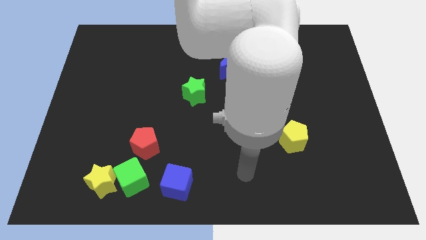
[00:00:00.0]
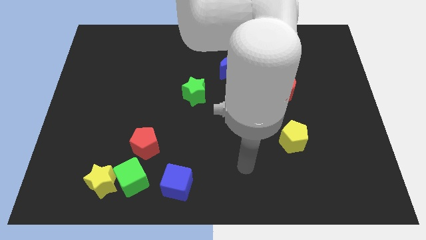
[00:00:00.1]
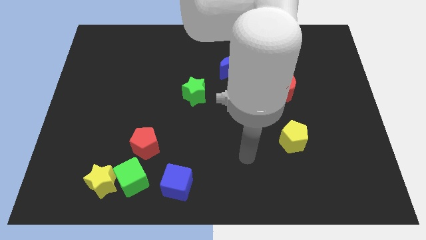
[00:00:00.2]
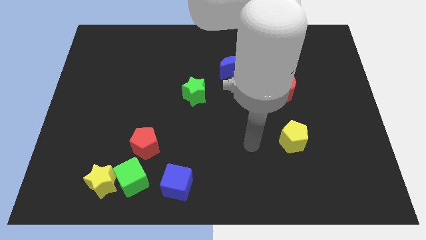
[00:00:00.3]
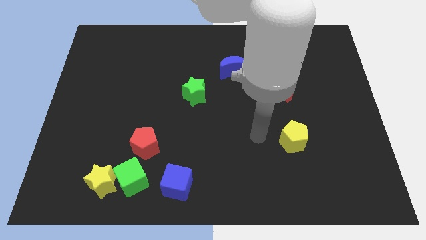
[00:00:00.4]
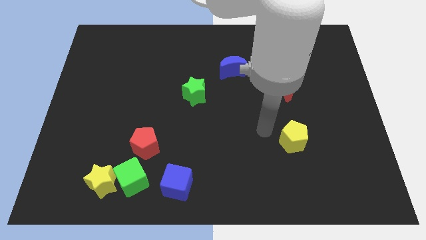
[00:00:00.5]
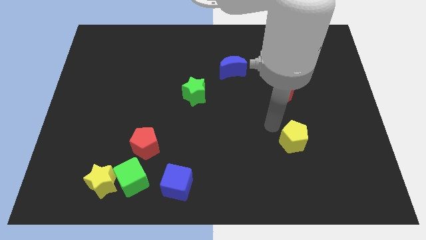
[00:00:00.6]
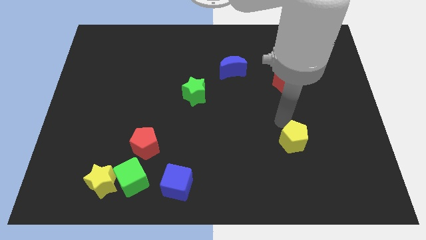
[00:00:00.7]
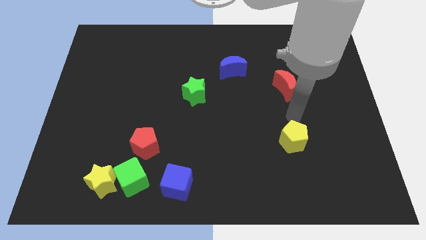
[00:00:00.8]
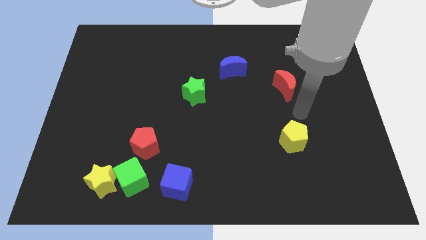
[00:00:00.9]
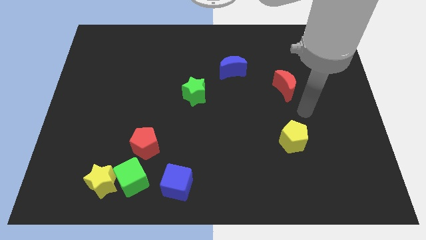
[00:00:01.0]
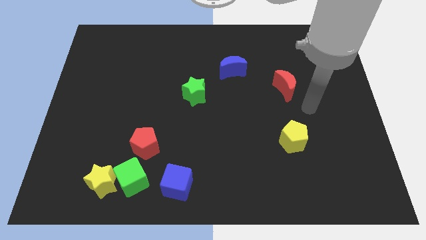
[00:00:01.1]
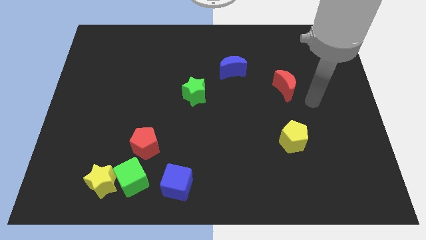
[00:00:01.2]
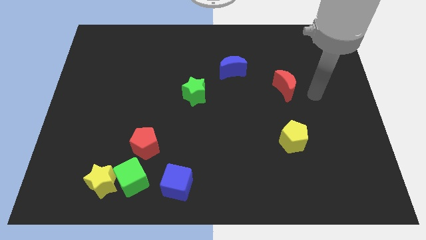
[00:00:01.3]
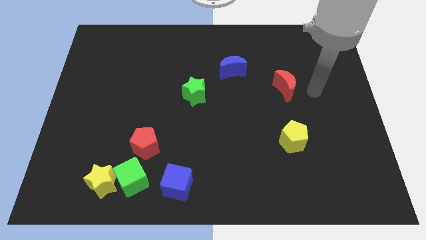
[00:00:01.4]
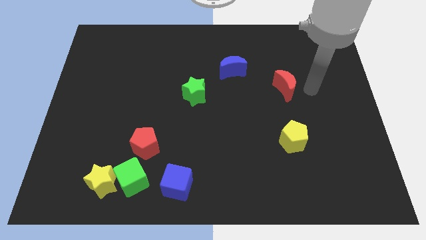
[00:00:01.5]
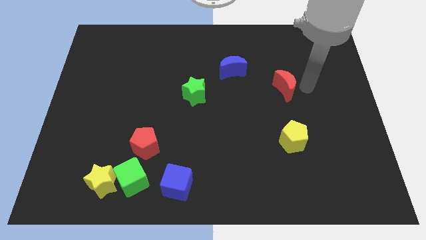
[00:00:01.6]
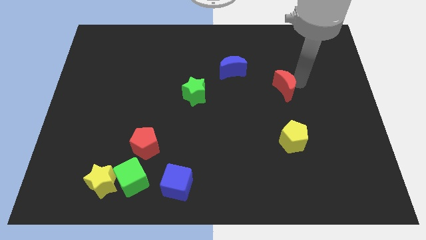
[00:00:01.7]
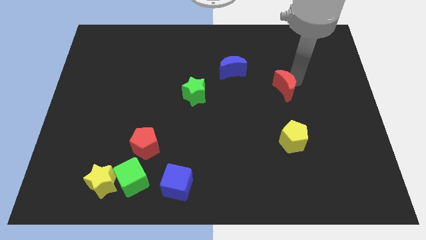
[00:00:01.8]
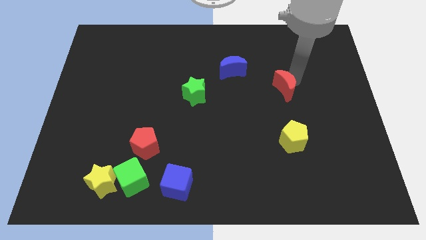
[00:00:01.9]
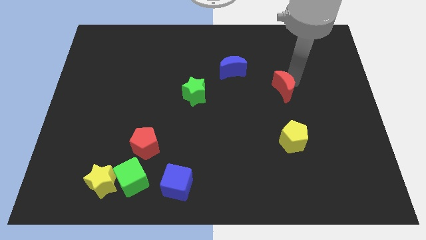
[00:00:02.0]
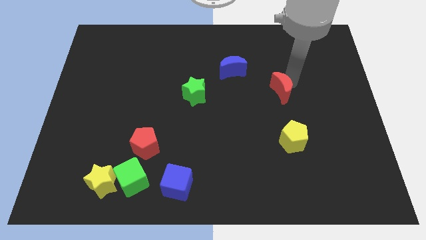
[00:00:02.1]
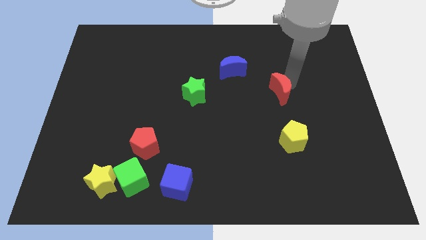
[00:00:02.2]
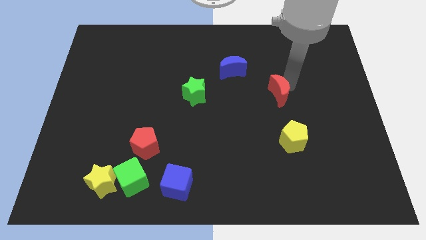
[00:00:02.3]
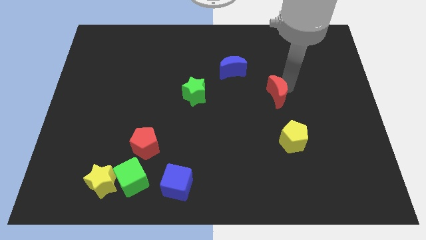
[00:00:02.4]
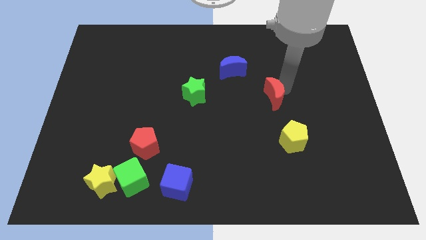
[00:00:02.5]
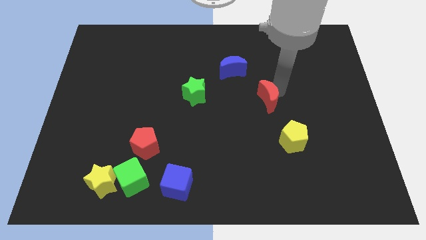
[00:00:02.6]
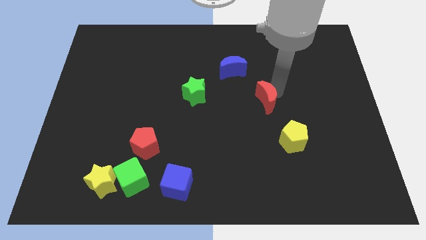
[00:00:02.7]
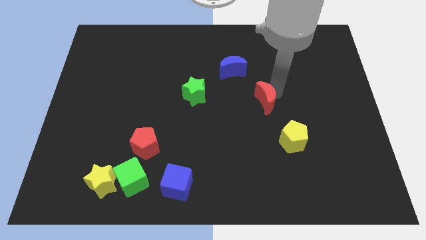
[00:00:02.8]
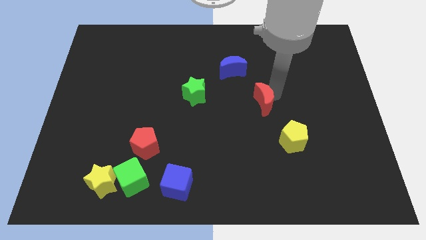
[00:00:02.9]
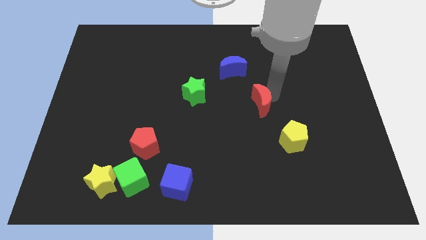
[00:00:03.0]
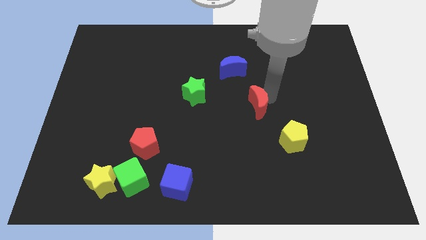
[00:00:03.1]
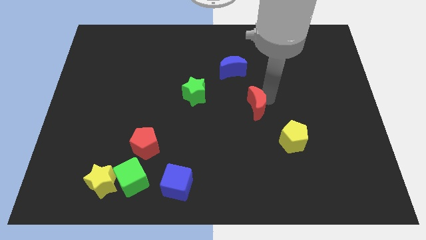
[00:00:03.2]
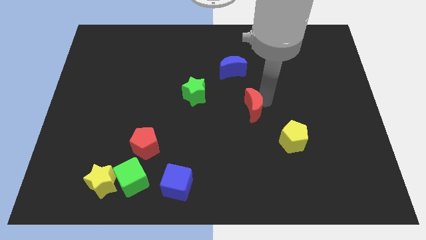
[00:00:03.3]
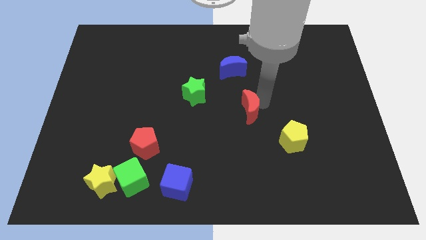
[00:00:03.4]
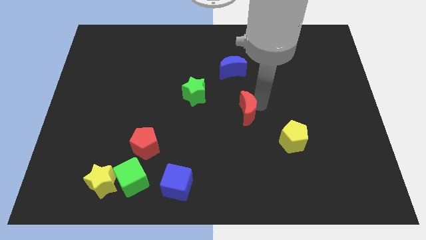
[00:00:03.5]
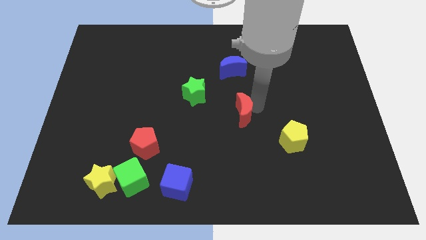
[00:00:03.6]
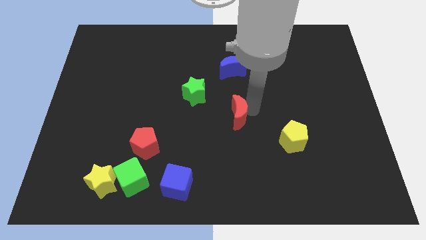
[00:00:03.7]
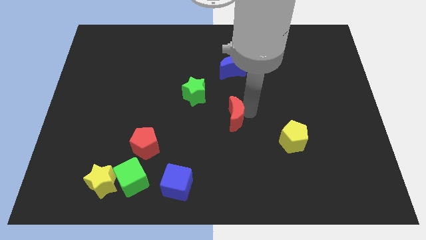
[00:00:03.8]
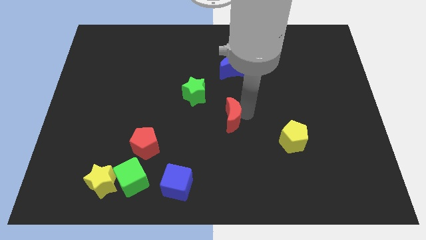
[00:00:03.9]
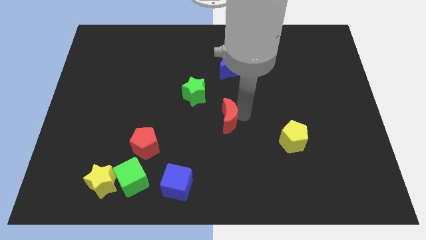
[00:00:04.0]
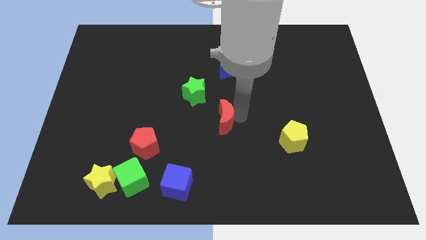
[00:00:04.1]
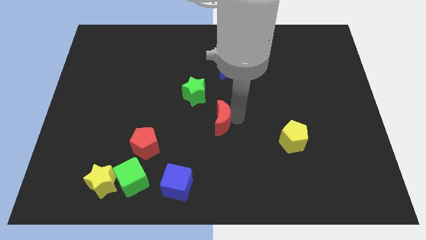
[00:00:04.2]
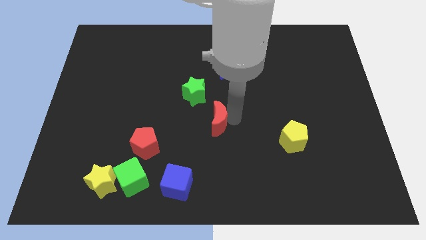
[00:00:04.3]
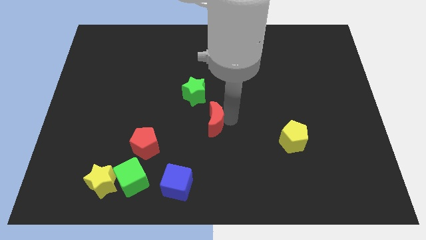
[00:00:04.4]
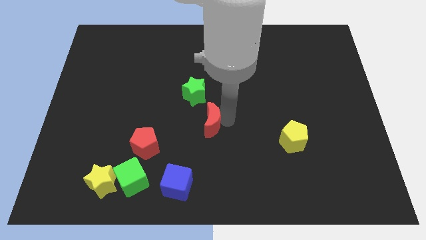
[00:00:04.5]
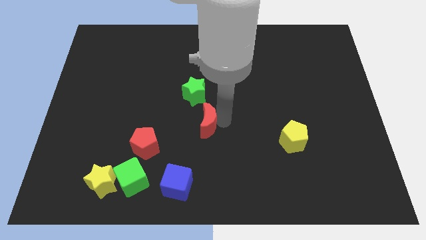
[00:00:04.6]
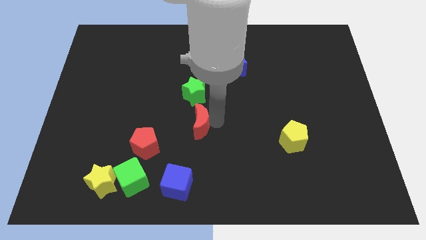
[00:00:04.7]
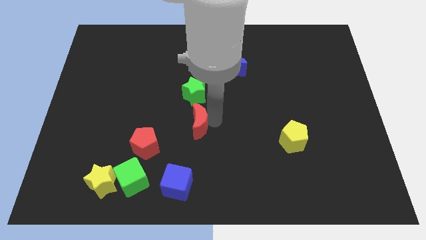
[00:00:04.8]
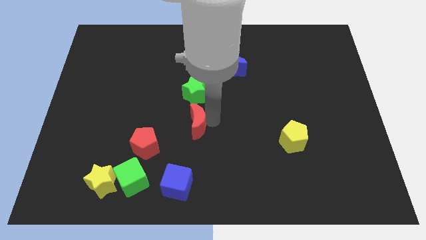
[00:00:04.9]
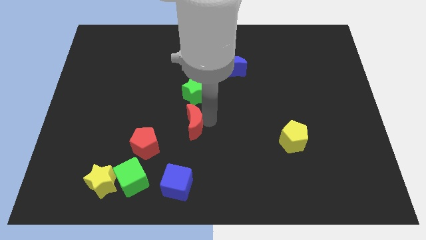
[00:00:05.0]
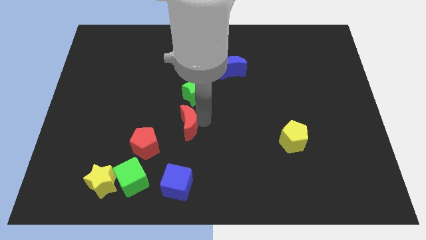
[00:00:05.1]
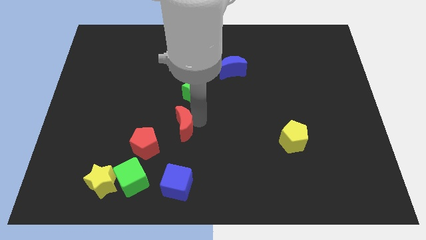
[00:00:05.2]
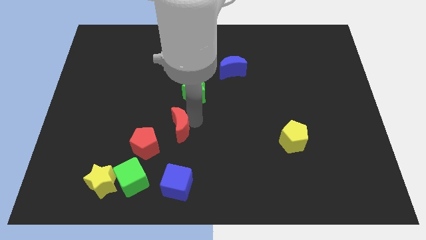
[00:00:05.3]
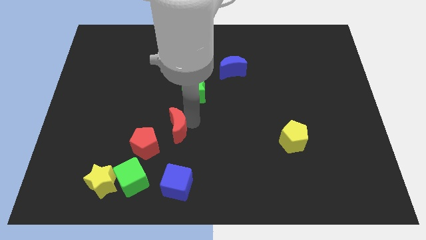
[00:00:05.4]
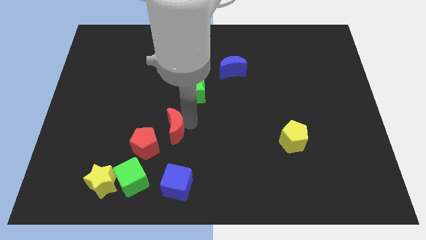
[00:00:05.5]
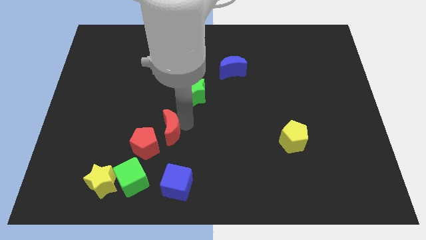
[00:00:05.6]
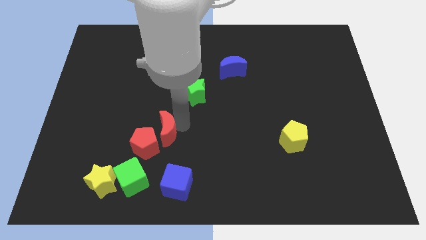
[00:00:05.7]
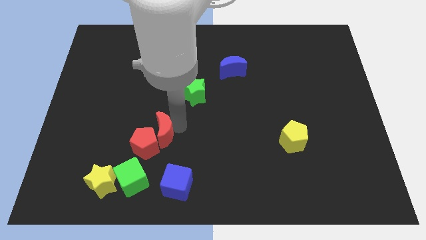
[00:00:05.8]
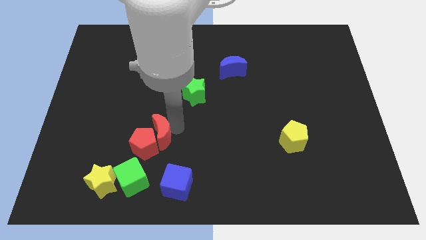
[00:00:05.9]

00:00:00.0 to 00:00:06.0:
slide the red moon to the red pentagon

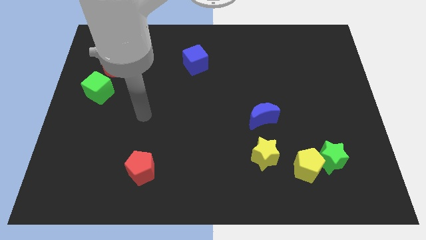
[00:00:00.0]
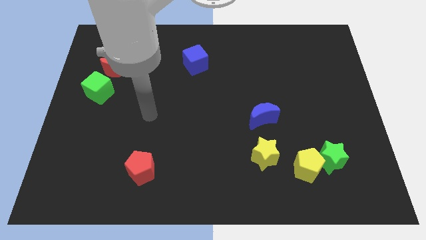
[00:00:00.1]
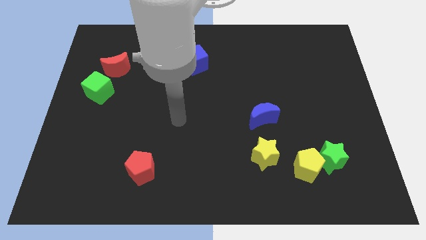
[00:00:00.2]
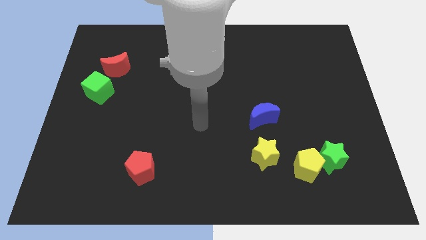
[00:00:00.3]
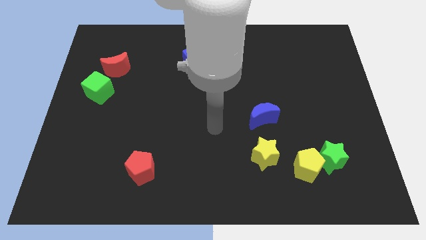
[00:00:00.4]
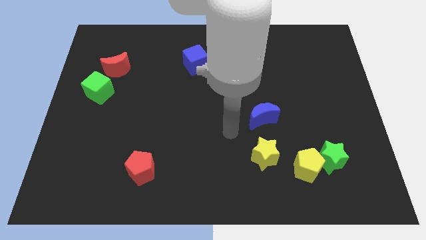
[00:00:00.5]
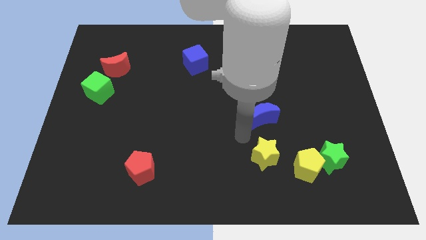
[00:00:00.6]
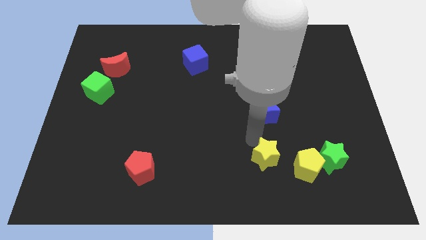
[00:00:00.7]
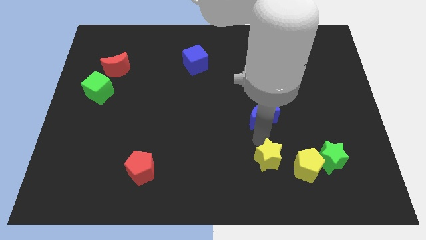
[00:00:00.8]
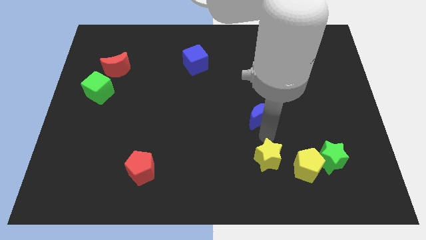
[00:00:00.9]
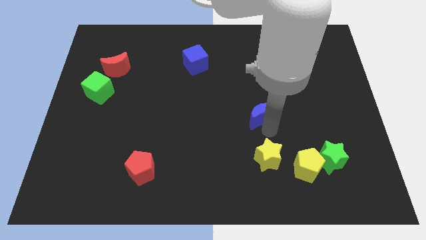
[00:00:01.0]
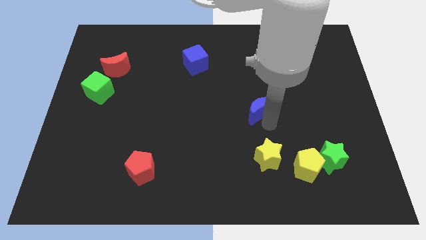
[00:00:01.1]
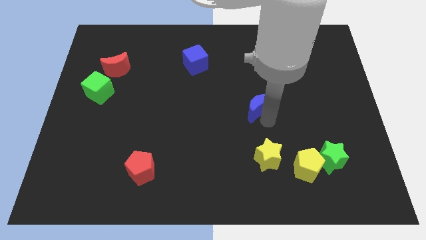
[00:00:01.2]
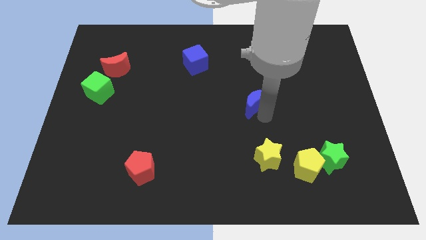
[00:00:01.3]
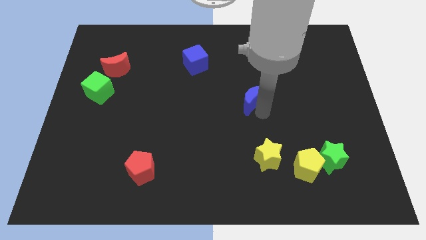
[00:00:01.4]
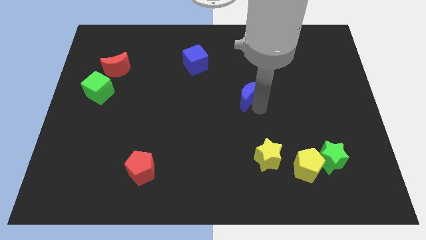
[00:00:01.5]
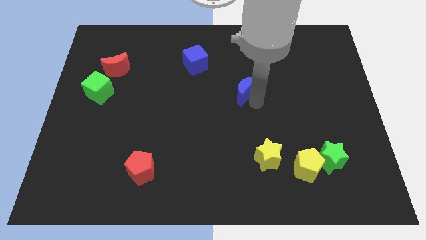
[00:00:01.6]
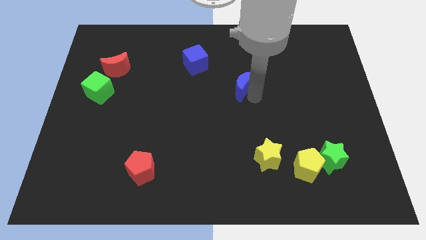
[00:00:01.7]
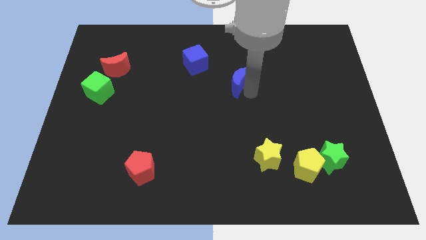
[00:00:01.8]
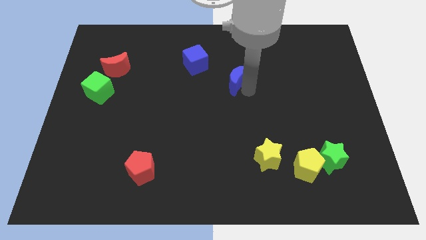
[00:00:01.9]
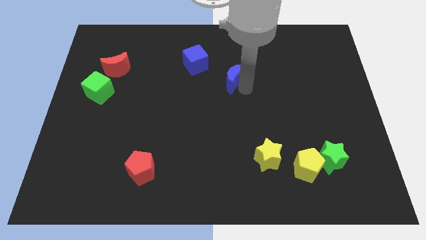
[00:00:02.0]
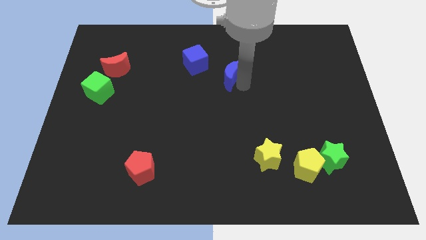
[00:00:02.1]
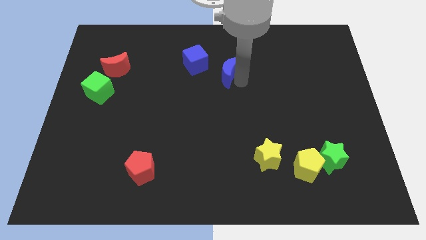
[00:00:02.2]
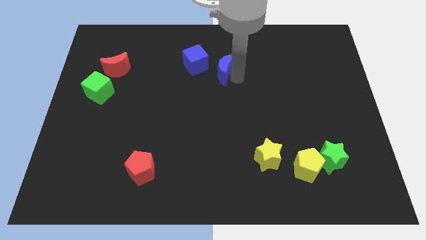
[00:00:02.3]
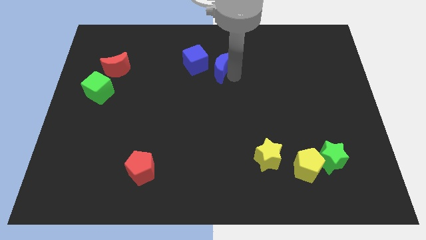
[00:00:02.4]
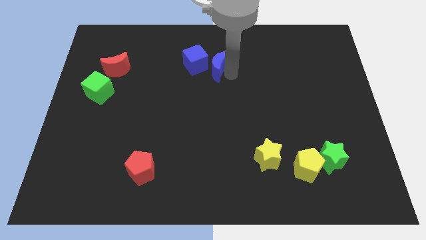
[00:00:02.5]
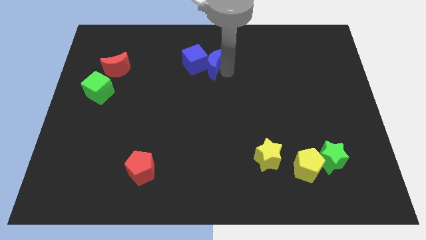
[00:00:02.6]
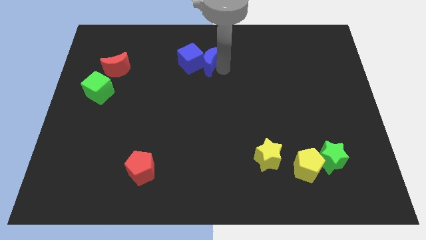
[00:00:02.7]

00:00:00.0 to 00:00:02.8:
move the blue moon to the blue cube
